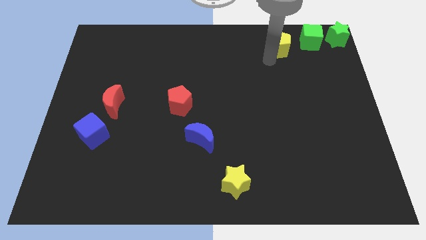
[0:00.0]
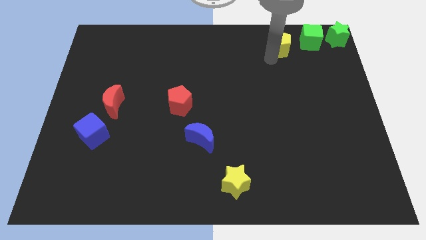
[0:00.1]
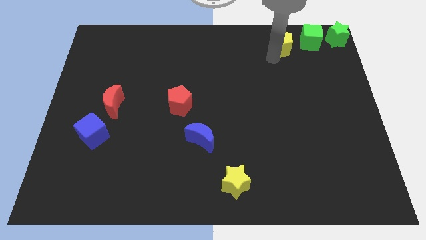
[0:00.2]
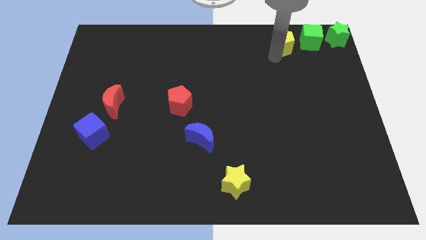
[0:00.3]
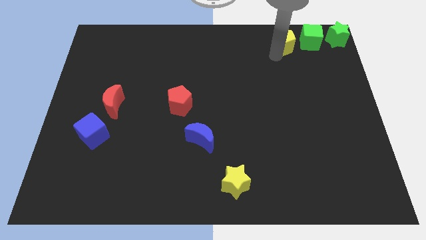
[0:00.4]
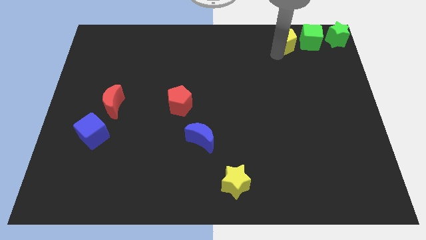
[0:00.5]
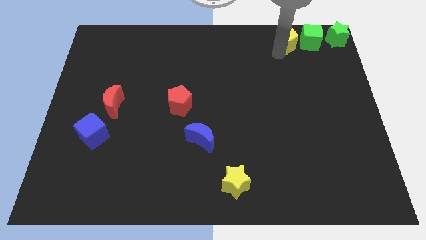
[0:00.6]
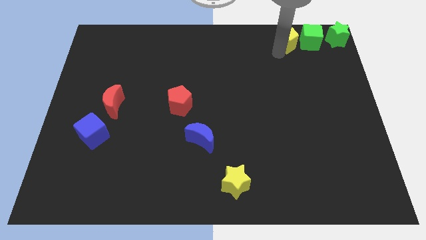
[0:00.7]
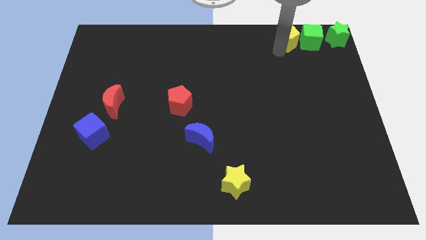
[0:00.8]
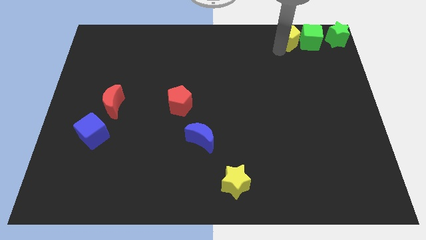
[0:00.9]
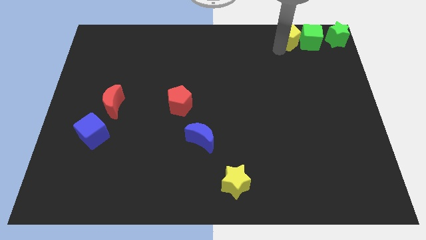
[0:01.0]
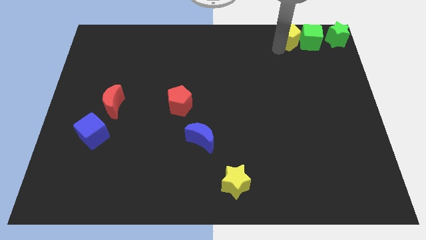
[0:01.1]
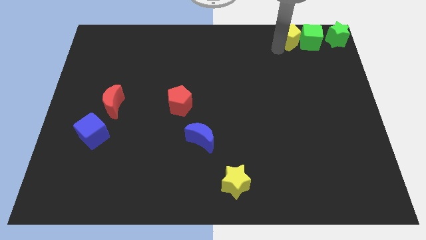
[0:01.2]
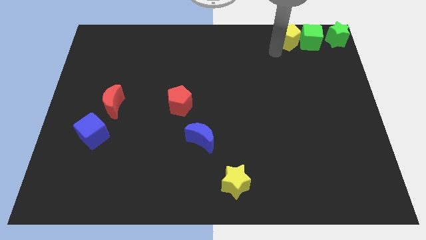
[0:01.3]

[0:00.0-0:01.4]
move the yellow pentagon parallel to the left of the green cube

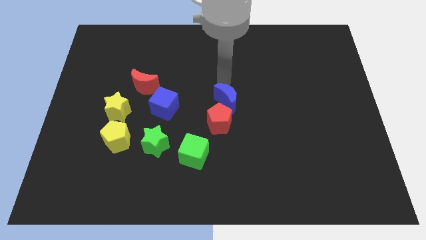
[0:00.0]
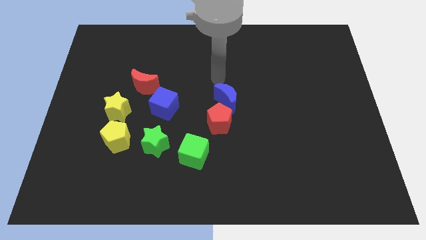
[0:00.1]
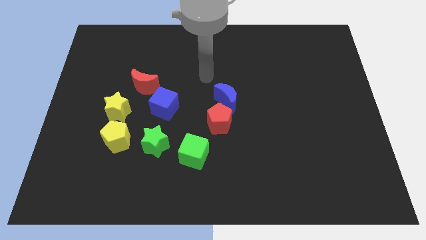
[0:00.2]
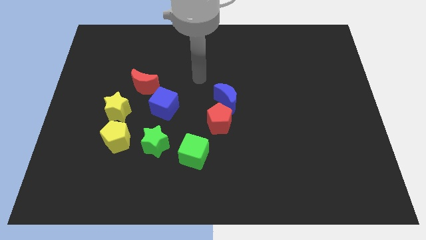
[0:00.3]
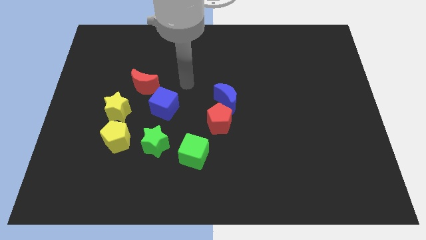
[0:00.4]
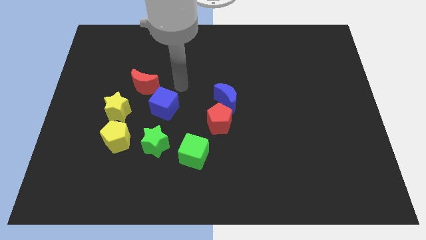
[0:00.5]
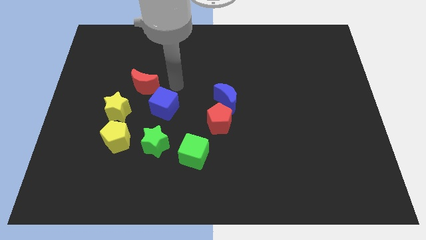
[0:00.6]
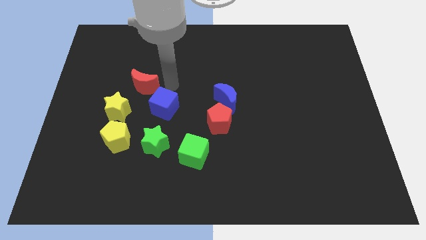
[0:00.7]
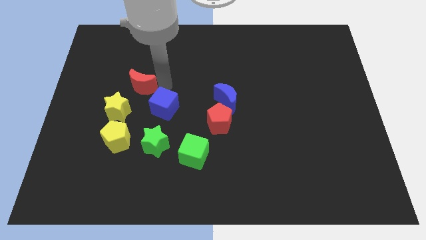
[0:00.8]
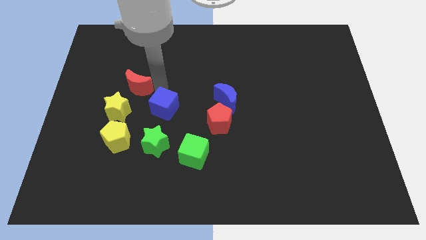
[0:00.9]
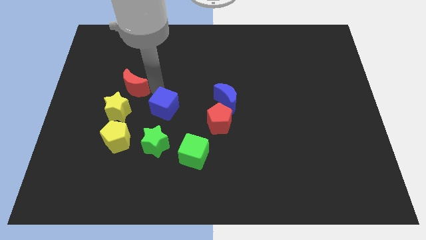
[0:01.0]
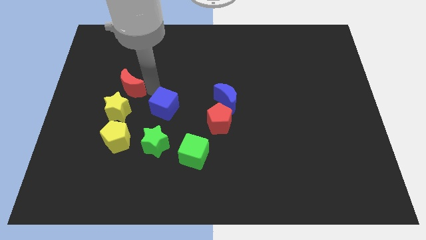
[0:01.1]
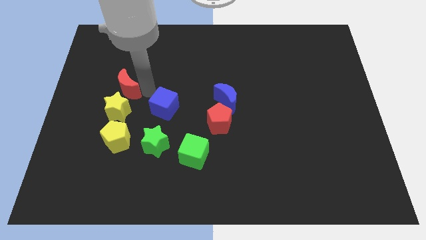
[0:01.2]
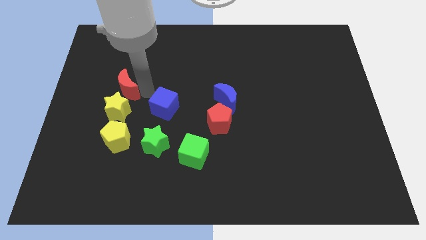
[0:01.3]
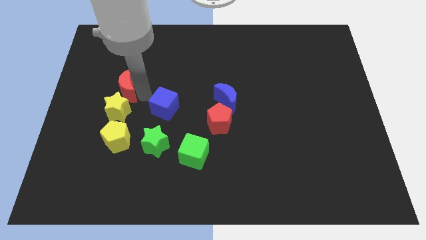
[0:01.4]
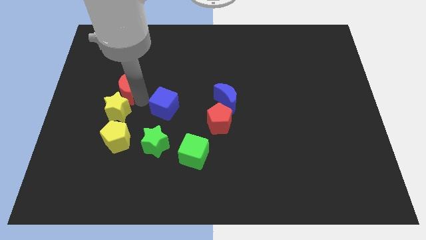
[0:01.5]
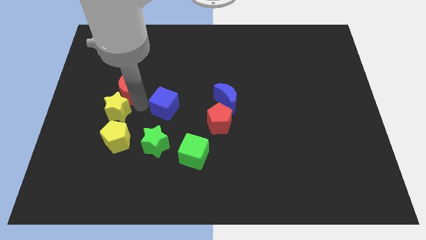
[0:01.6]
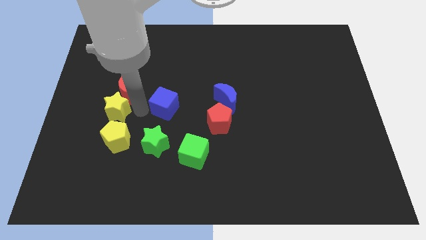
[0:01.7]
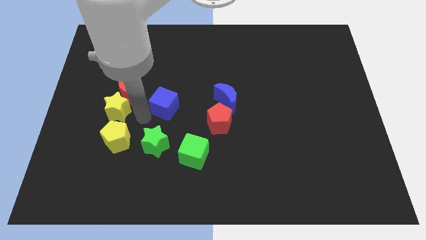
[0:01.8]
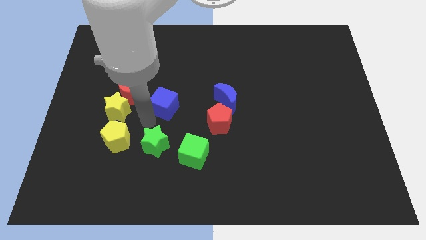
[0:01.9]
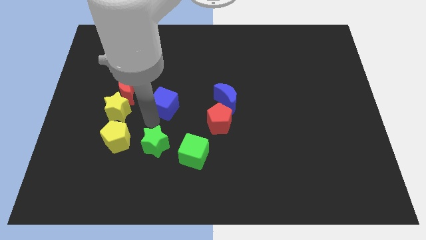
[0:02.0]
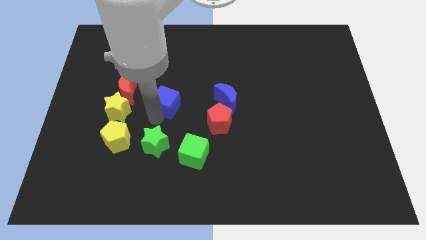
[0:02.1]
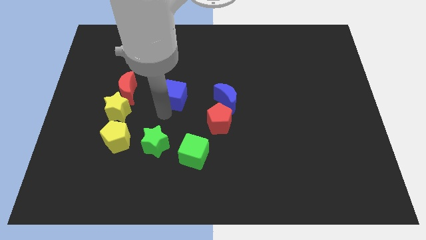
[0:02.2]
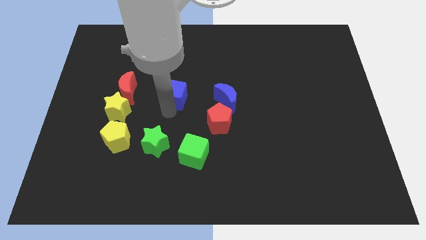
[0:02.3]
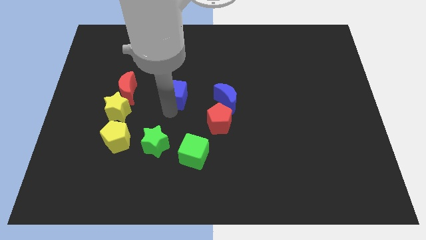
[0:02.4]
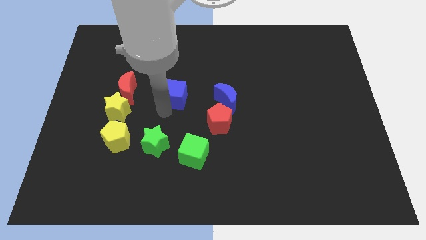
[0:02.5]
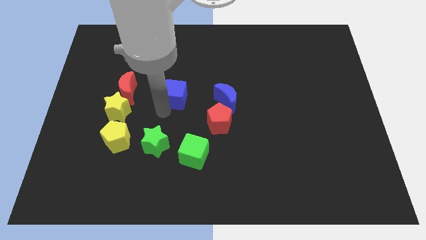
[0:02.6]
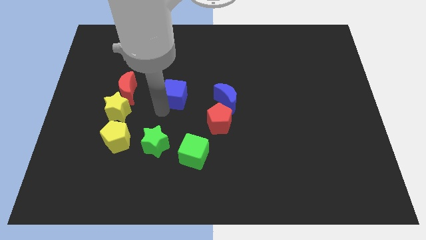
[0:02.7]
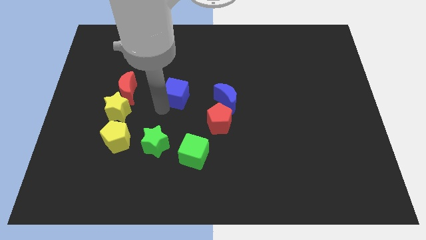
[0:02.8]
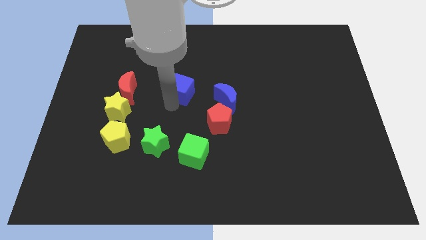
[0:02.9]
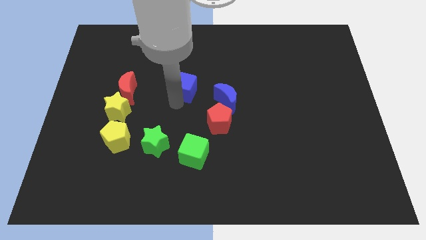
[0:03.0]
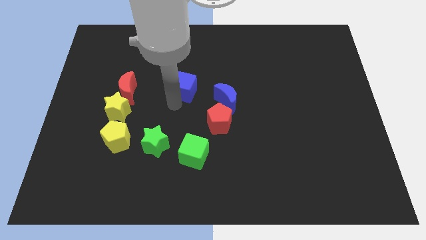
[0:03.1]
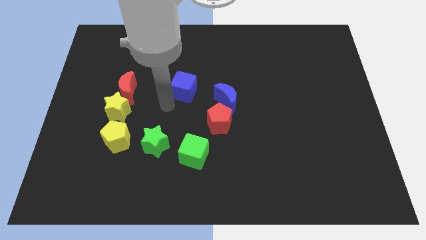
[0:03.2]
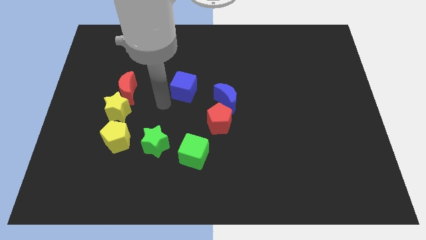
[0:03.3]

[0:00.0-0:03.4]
push the blue cube parallel to the blue crescent

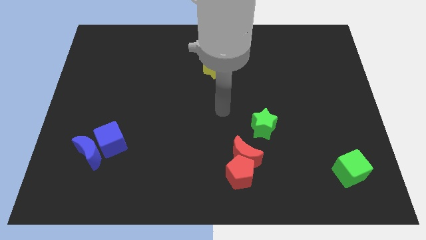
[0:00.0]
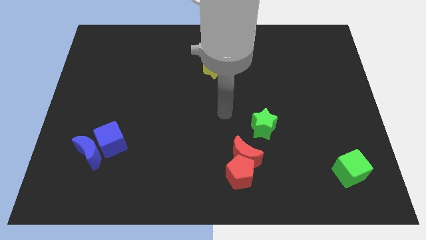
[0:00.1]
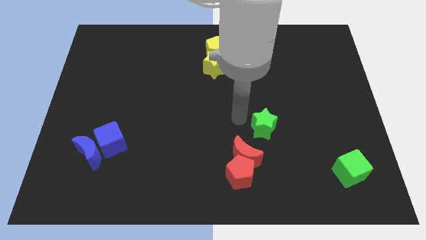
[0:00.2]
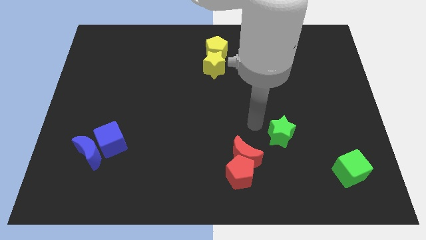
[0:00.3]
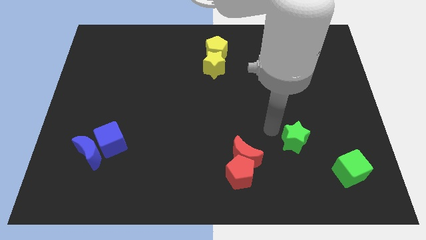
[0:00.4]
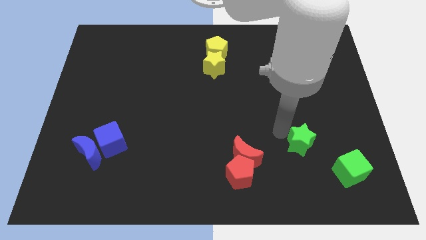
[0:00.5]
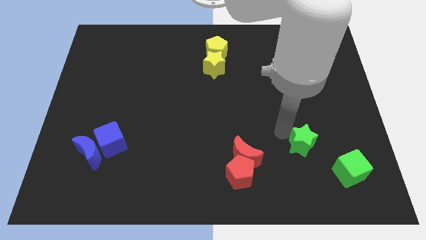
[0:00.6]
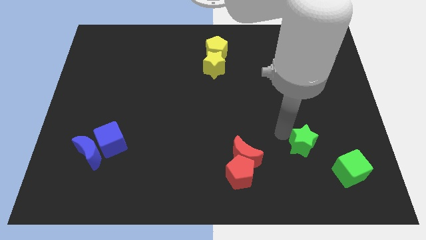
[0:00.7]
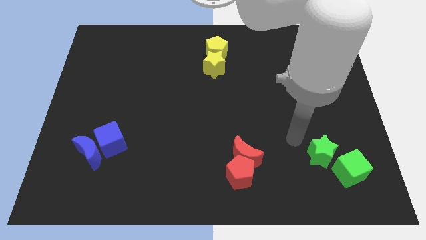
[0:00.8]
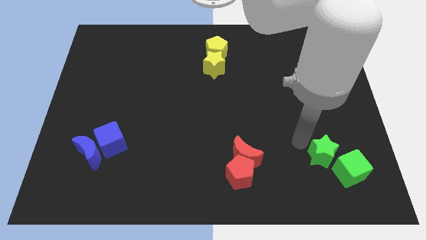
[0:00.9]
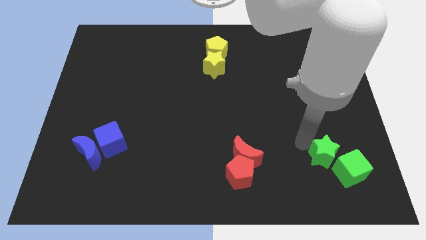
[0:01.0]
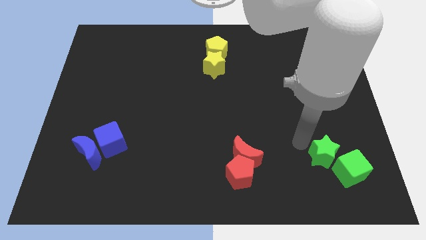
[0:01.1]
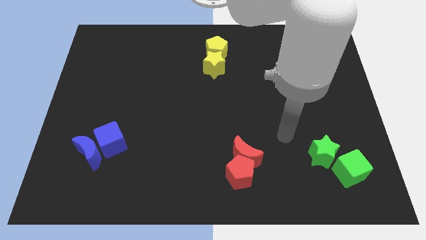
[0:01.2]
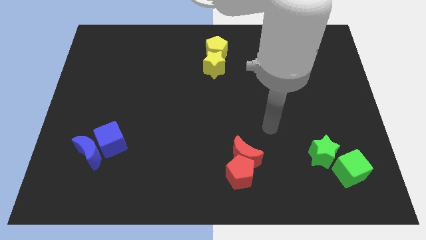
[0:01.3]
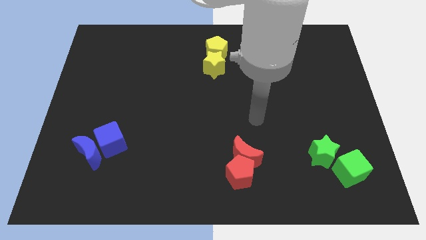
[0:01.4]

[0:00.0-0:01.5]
move the green star towards the green cube

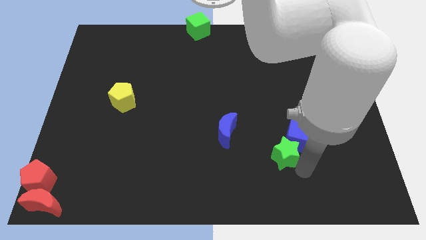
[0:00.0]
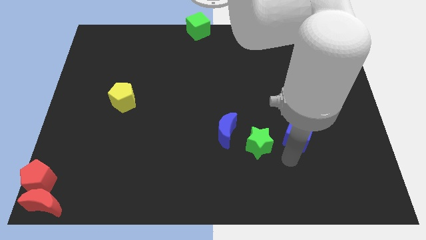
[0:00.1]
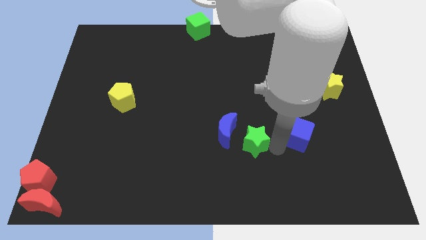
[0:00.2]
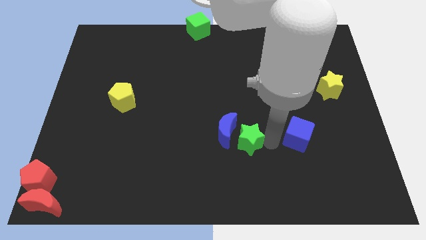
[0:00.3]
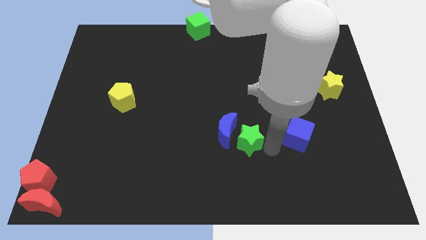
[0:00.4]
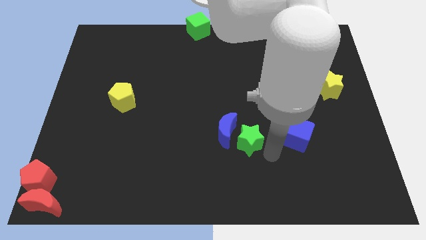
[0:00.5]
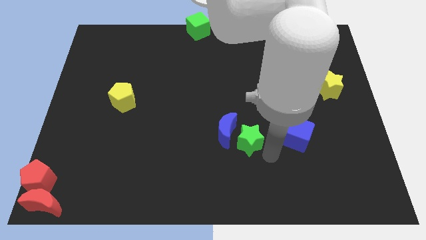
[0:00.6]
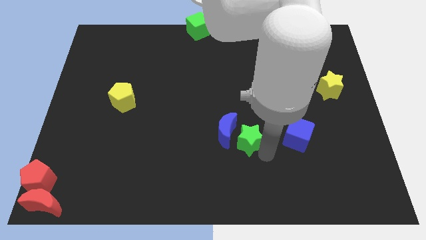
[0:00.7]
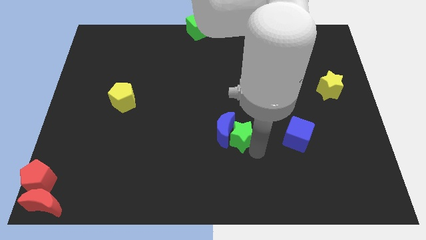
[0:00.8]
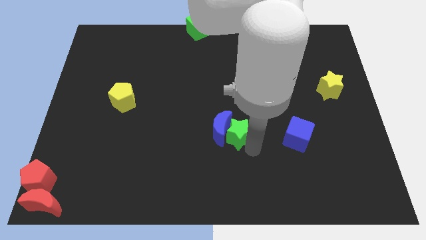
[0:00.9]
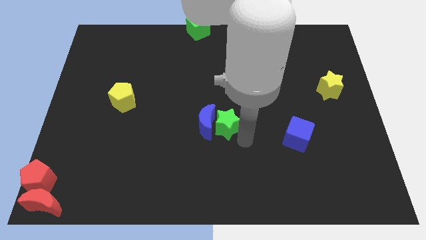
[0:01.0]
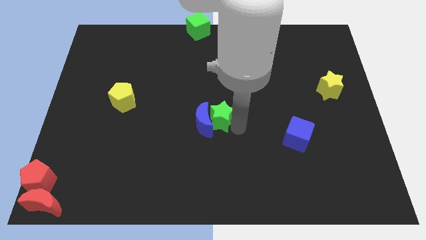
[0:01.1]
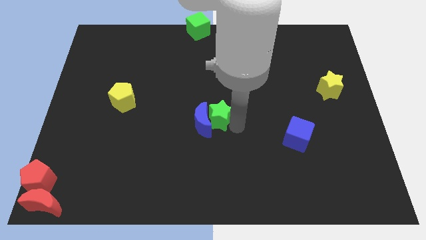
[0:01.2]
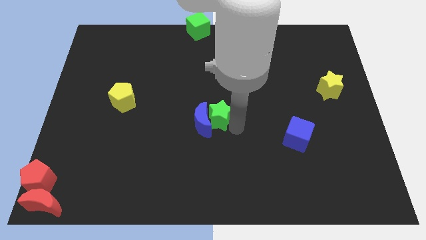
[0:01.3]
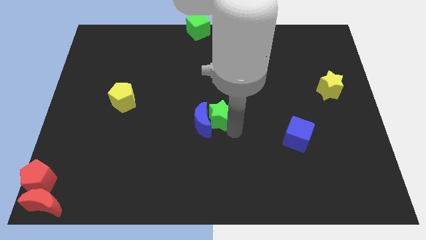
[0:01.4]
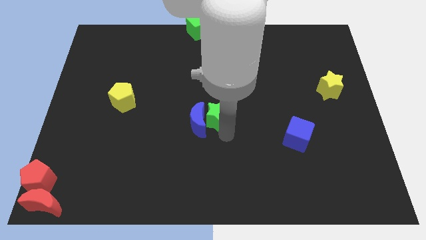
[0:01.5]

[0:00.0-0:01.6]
push the green star into the blue moon

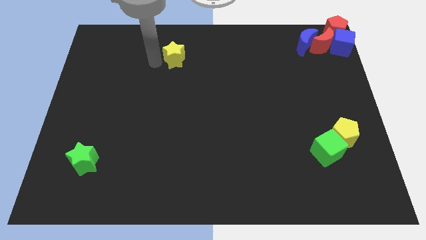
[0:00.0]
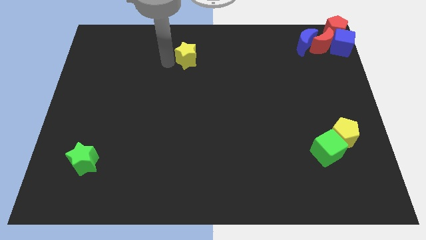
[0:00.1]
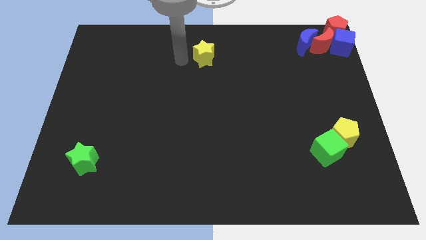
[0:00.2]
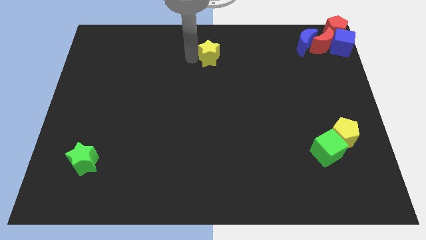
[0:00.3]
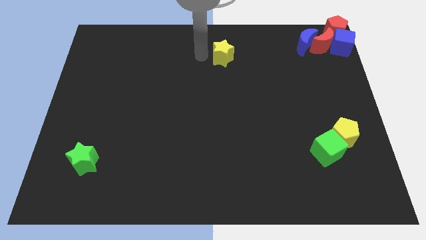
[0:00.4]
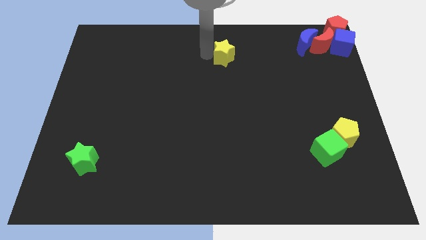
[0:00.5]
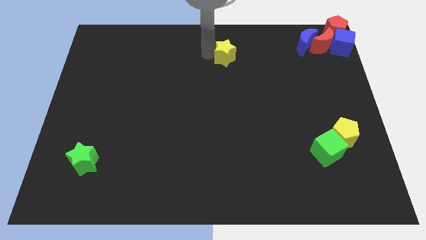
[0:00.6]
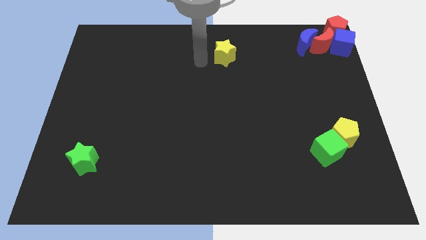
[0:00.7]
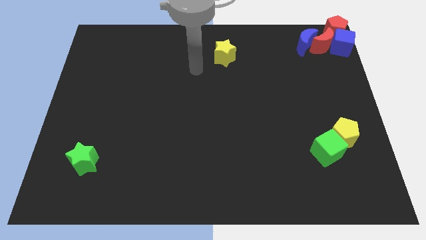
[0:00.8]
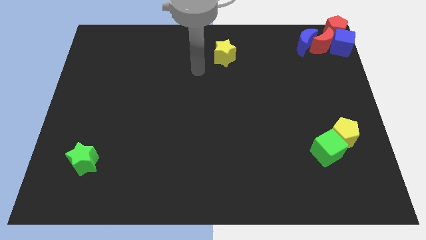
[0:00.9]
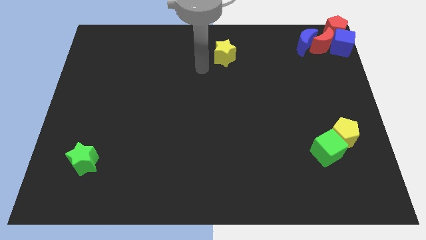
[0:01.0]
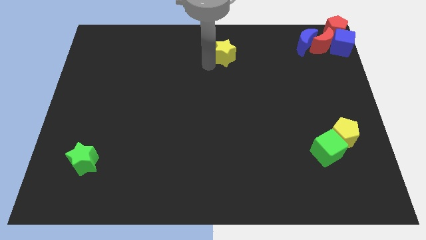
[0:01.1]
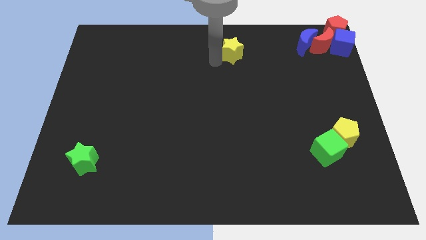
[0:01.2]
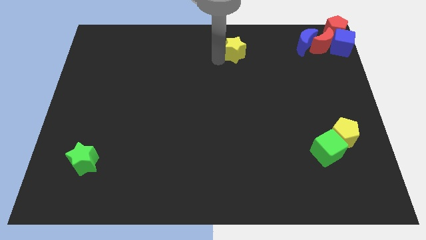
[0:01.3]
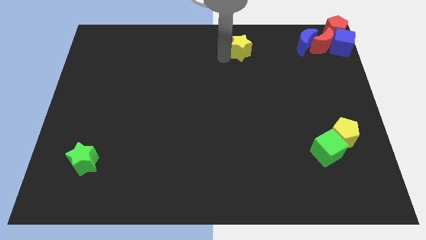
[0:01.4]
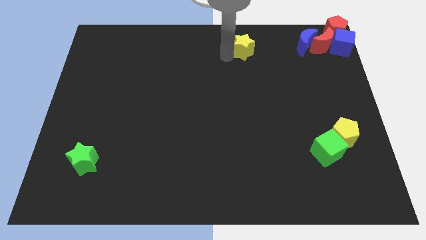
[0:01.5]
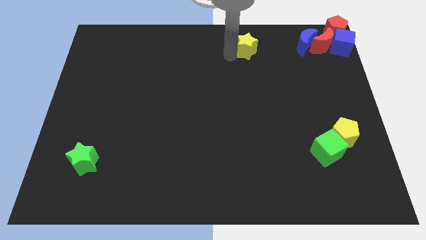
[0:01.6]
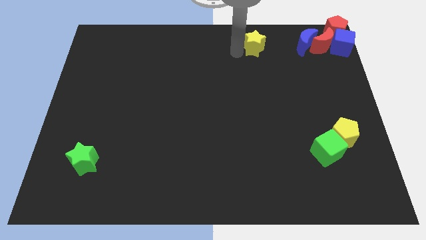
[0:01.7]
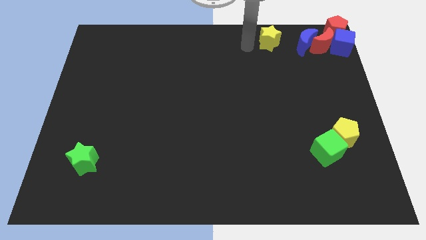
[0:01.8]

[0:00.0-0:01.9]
place the yellow star parallel left to the blue crescent
